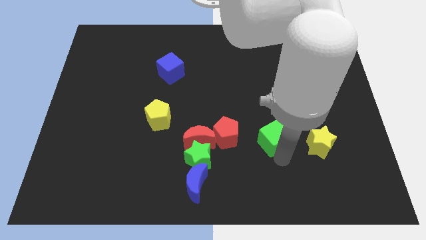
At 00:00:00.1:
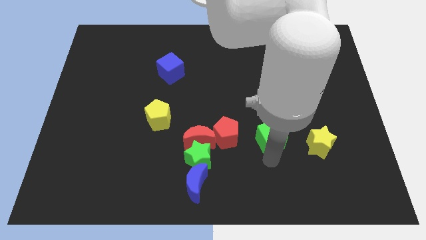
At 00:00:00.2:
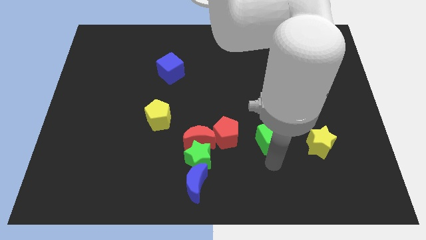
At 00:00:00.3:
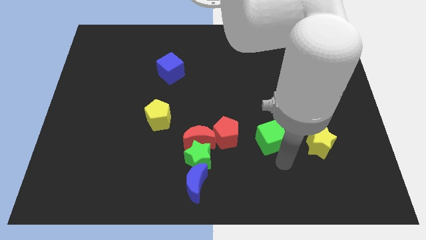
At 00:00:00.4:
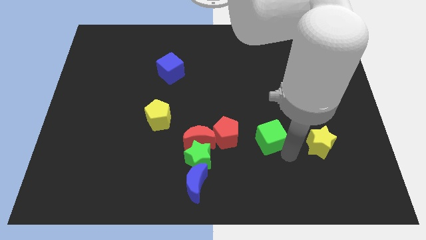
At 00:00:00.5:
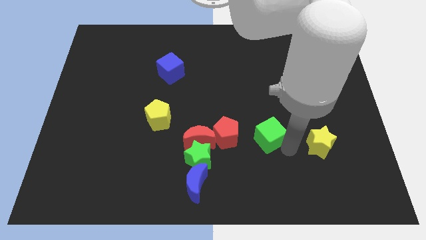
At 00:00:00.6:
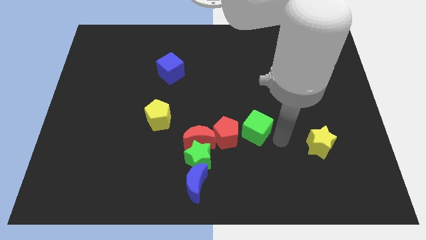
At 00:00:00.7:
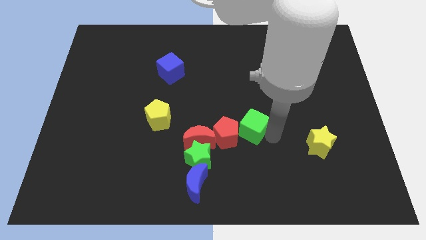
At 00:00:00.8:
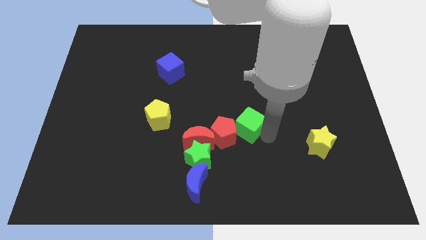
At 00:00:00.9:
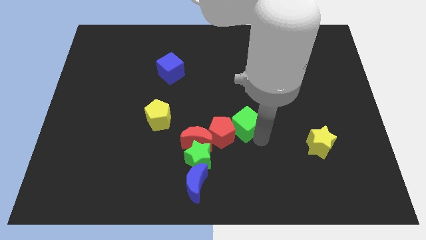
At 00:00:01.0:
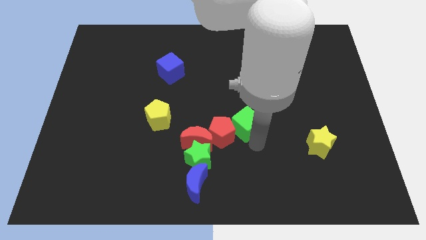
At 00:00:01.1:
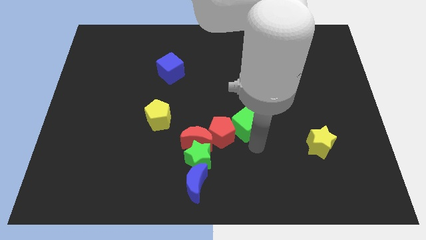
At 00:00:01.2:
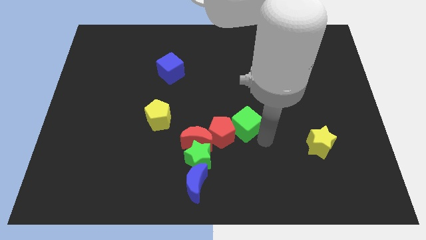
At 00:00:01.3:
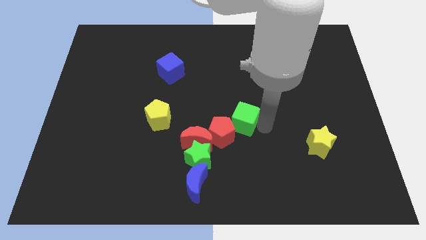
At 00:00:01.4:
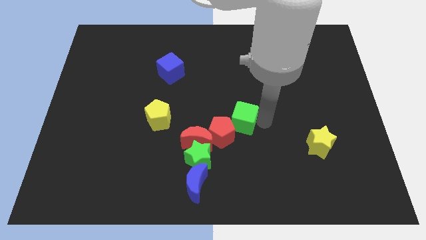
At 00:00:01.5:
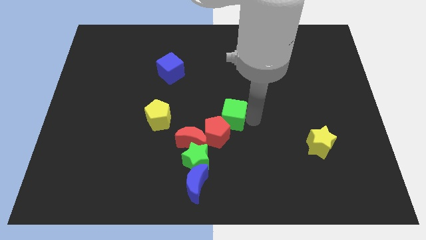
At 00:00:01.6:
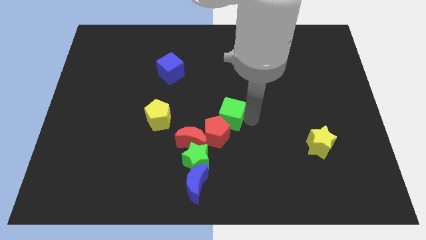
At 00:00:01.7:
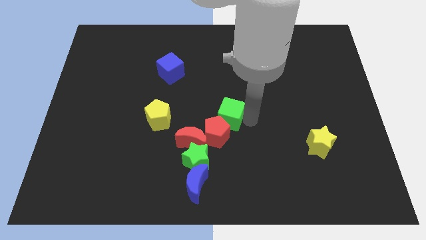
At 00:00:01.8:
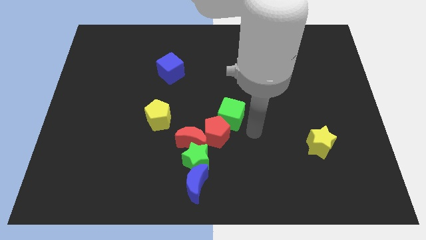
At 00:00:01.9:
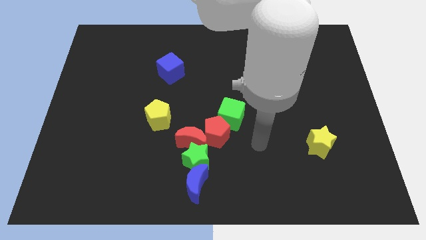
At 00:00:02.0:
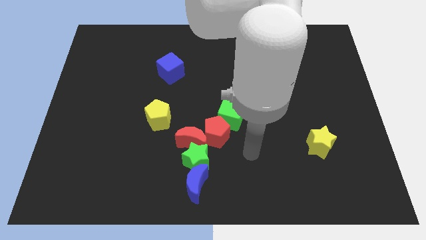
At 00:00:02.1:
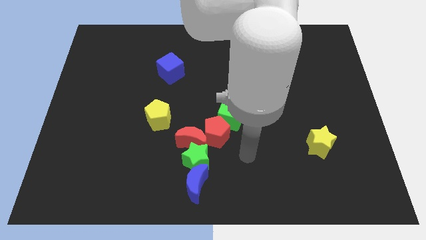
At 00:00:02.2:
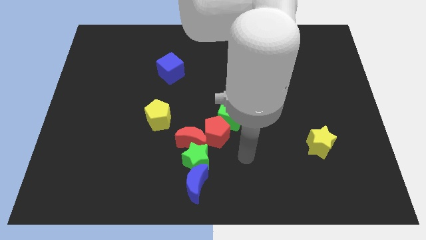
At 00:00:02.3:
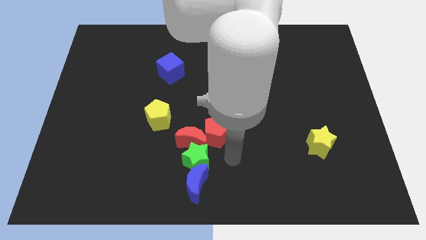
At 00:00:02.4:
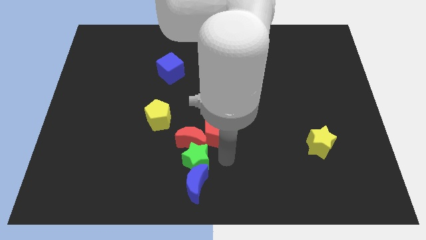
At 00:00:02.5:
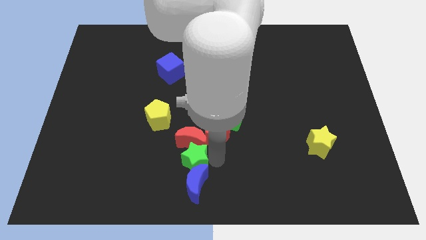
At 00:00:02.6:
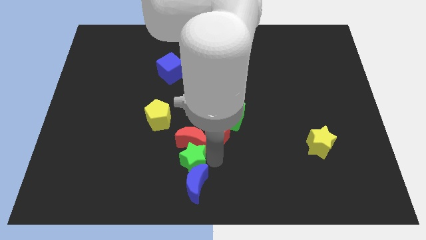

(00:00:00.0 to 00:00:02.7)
push the green cube diagonally top right to the red pentagon

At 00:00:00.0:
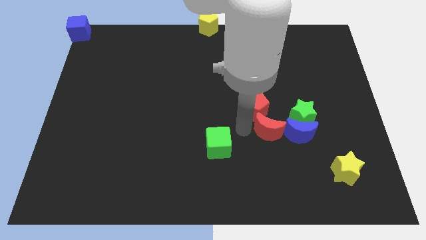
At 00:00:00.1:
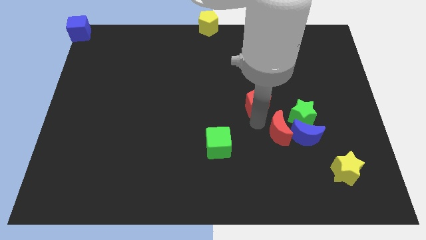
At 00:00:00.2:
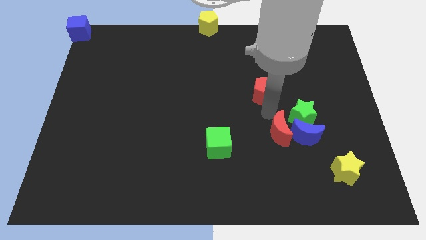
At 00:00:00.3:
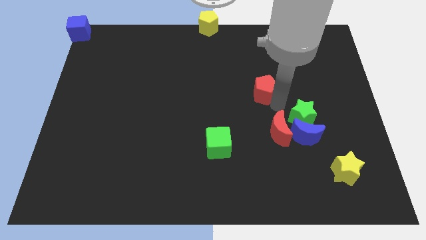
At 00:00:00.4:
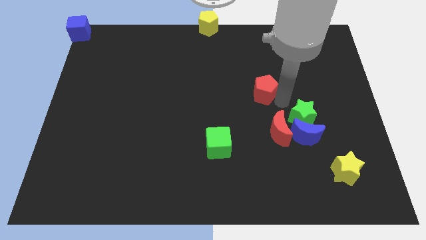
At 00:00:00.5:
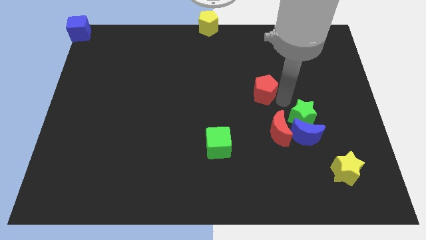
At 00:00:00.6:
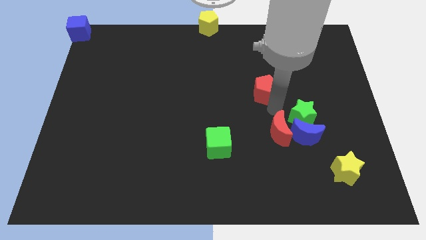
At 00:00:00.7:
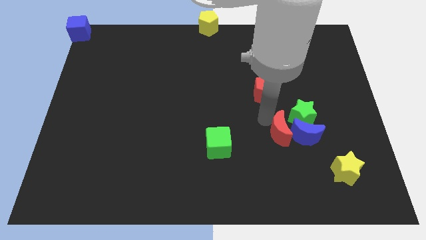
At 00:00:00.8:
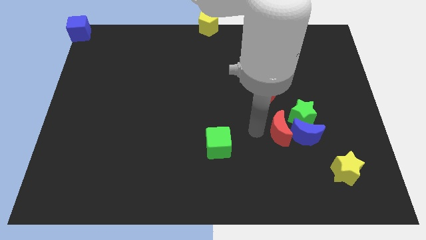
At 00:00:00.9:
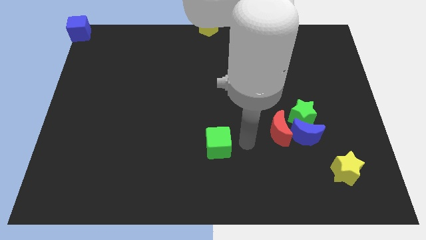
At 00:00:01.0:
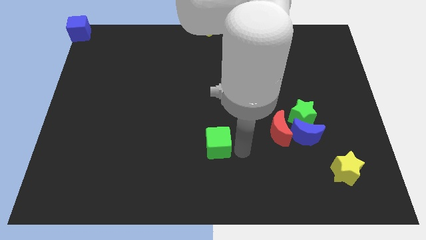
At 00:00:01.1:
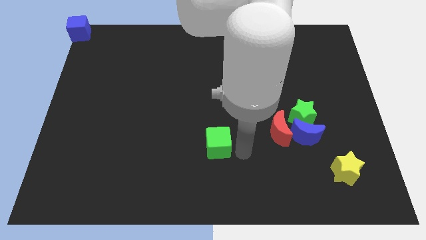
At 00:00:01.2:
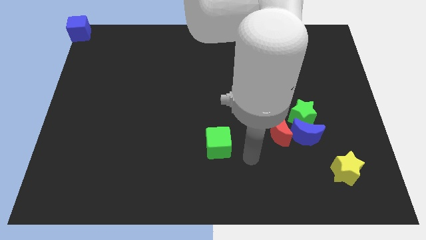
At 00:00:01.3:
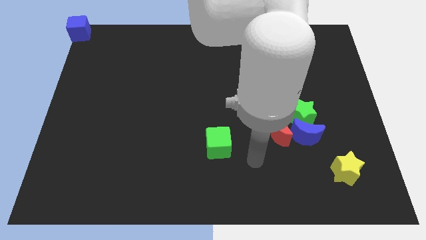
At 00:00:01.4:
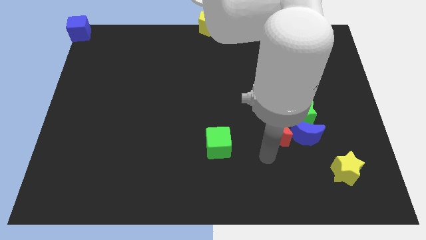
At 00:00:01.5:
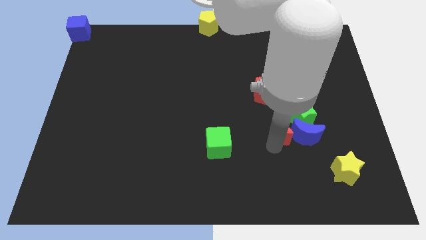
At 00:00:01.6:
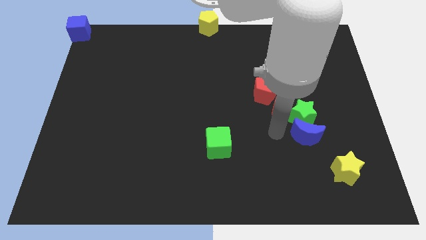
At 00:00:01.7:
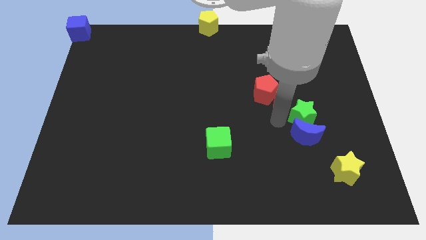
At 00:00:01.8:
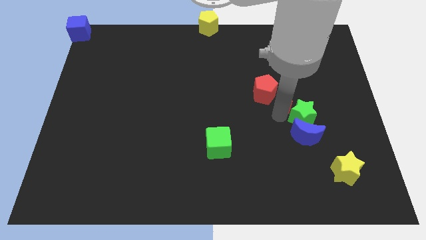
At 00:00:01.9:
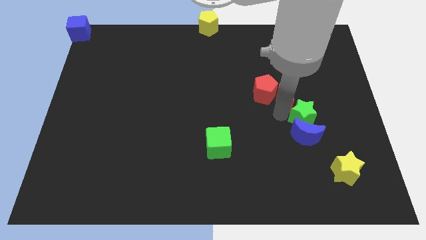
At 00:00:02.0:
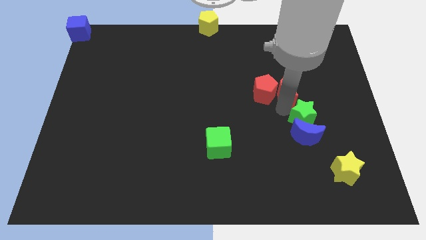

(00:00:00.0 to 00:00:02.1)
place the red moon to the right side of the red pentagon

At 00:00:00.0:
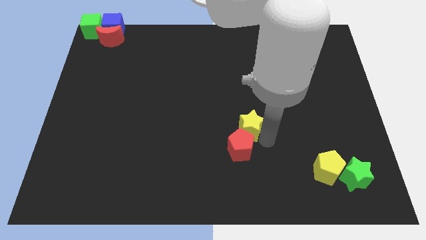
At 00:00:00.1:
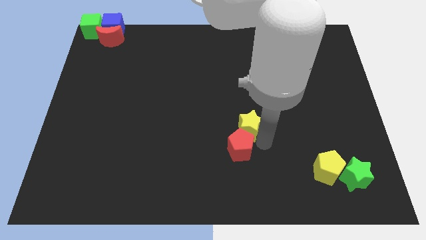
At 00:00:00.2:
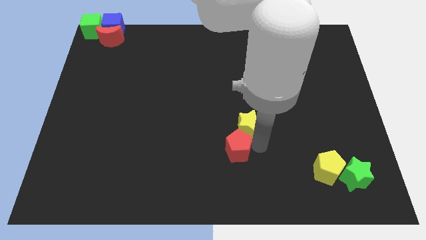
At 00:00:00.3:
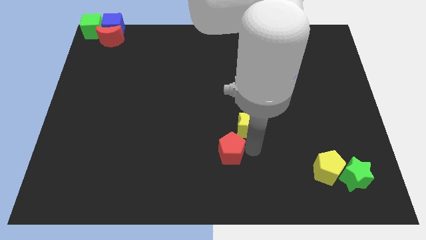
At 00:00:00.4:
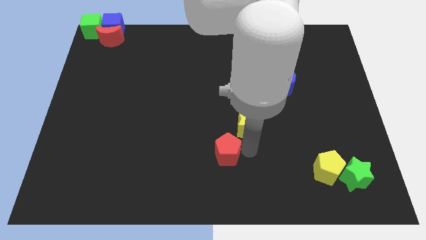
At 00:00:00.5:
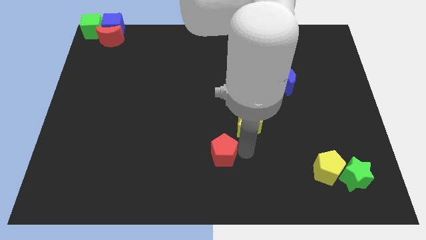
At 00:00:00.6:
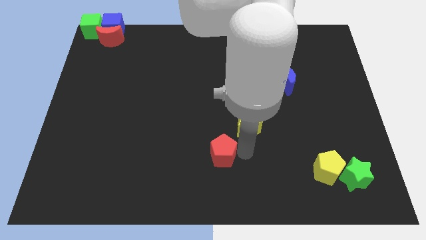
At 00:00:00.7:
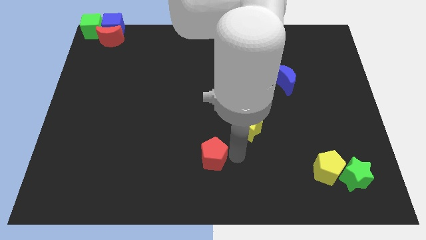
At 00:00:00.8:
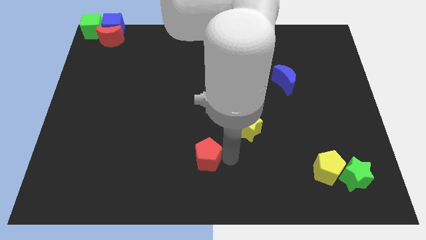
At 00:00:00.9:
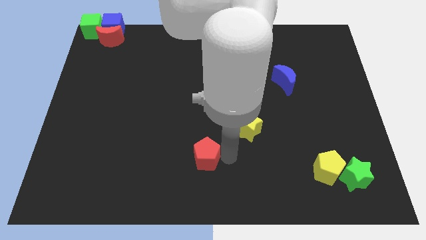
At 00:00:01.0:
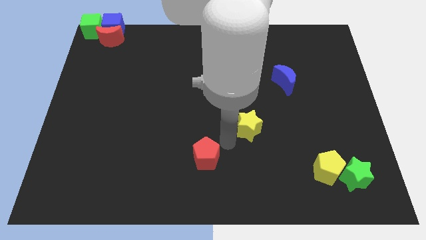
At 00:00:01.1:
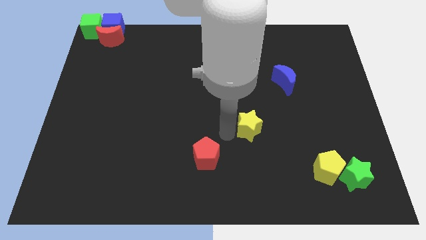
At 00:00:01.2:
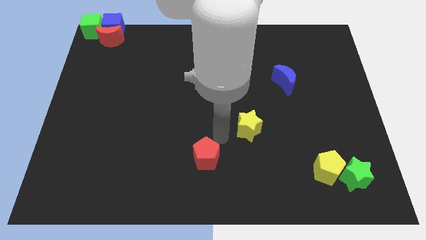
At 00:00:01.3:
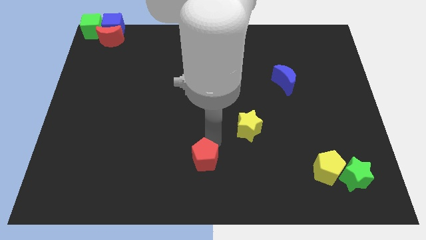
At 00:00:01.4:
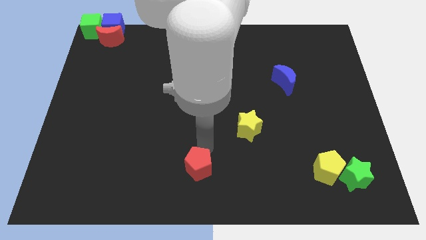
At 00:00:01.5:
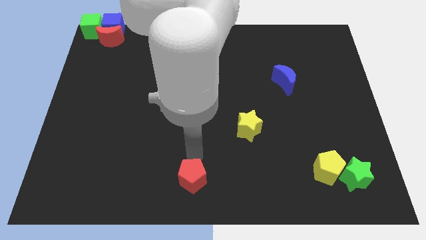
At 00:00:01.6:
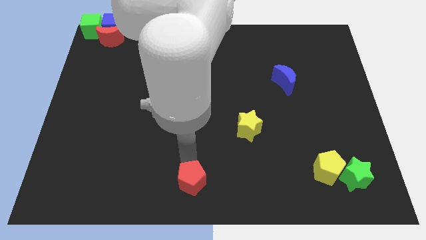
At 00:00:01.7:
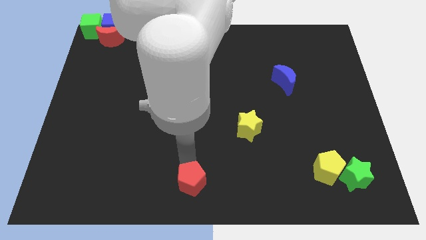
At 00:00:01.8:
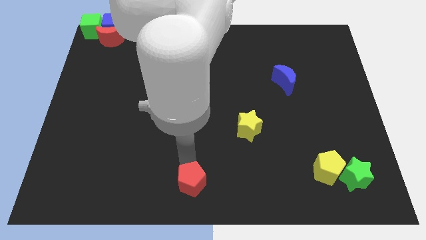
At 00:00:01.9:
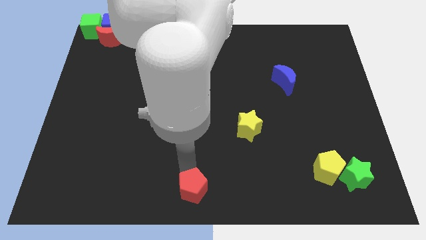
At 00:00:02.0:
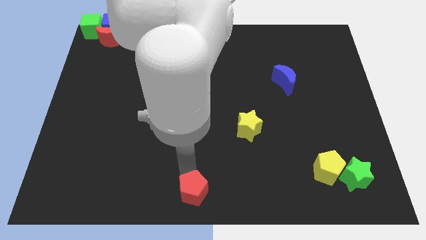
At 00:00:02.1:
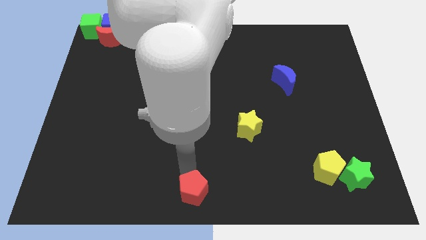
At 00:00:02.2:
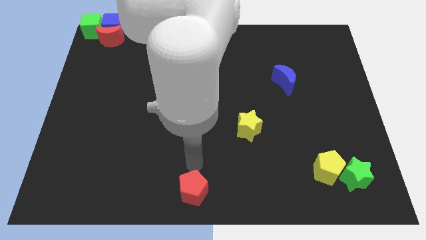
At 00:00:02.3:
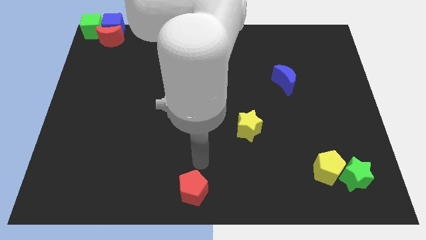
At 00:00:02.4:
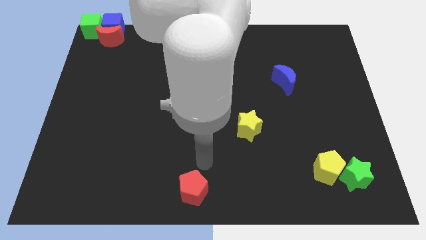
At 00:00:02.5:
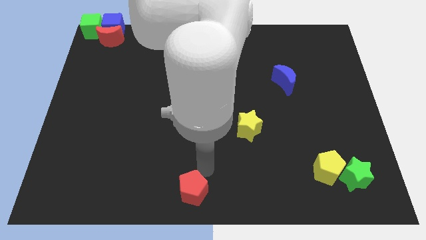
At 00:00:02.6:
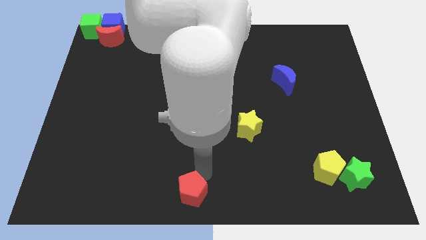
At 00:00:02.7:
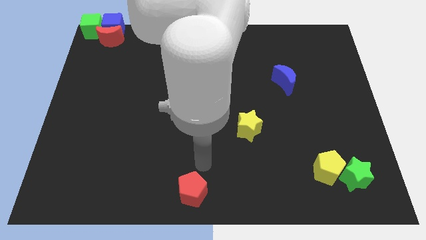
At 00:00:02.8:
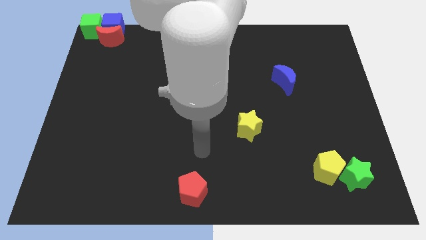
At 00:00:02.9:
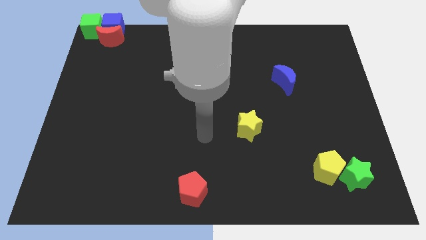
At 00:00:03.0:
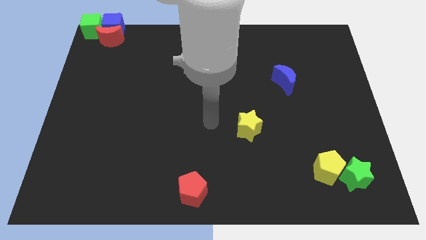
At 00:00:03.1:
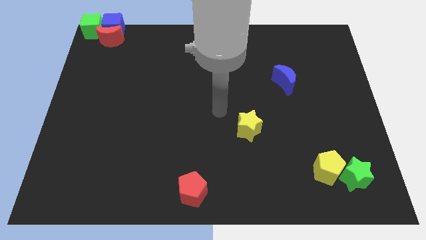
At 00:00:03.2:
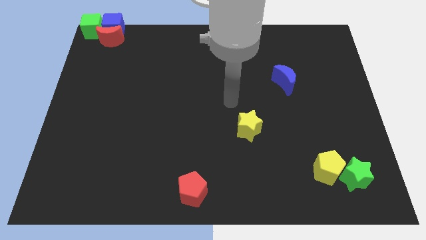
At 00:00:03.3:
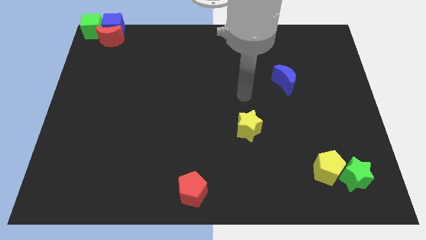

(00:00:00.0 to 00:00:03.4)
place the red pentagon to the bottom center

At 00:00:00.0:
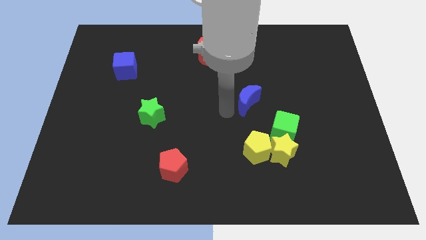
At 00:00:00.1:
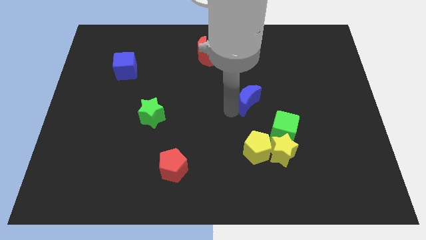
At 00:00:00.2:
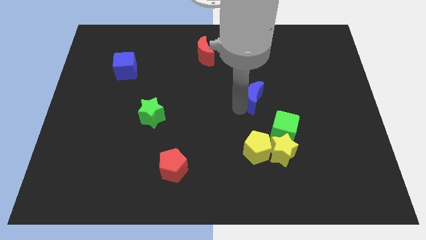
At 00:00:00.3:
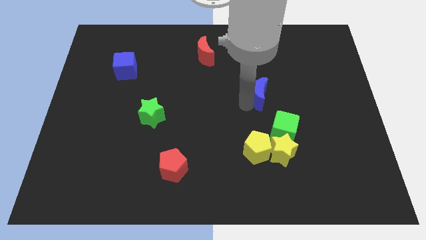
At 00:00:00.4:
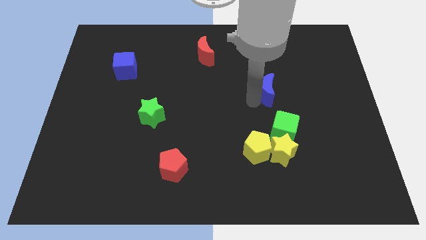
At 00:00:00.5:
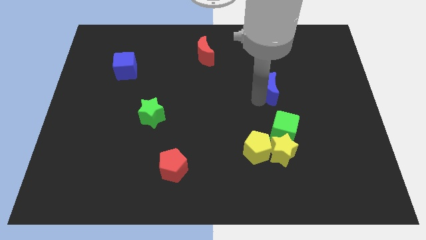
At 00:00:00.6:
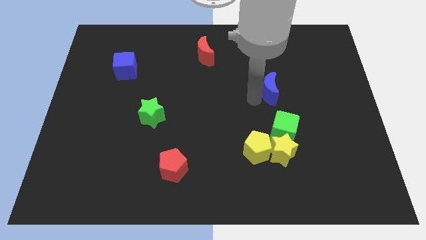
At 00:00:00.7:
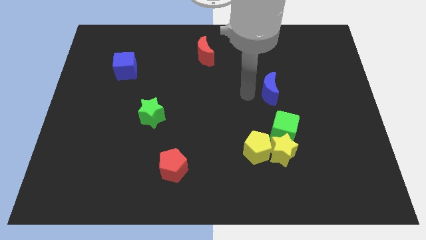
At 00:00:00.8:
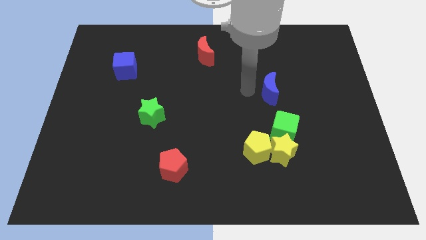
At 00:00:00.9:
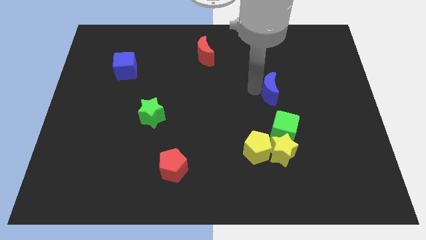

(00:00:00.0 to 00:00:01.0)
move the blue crescent to the right
